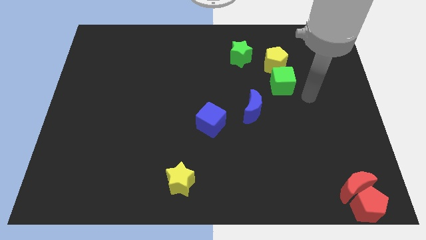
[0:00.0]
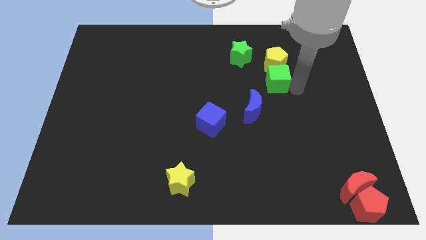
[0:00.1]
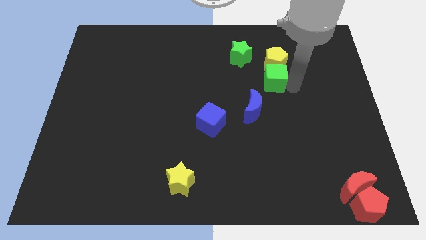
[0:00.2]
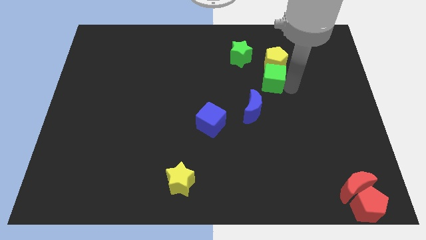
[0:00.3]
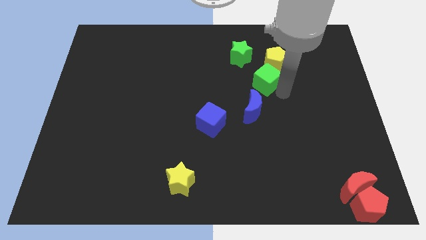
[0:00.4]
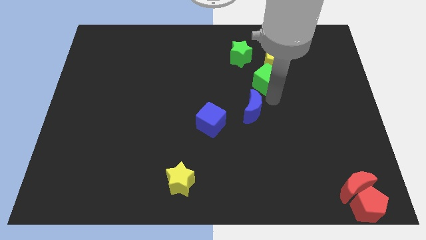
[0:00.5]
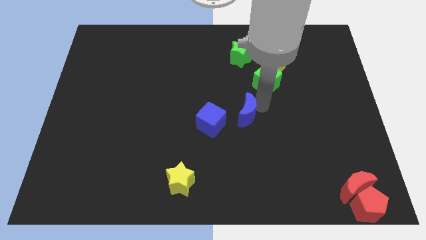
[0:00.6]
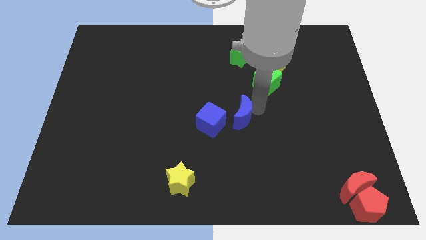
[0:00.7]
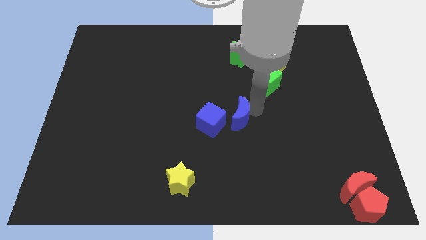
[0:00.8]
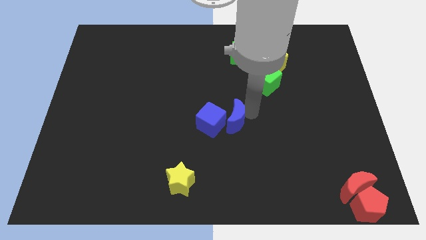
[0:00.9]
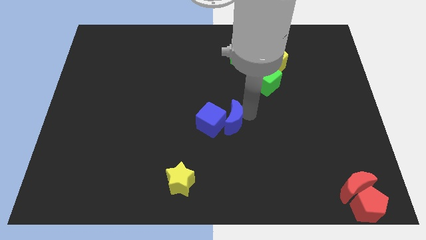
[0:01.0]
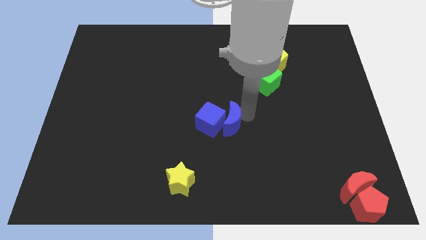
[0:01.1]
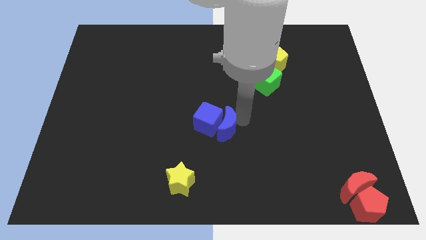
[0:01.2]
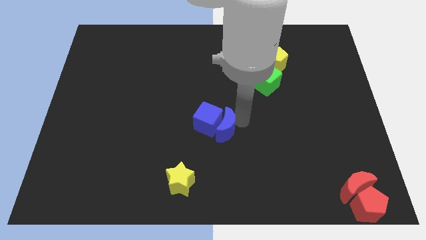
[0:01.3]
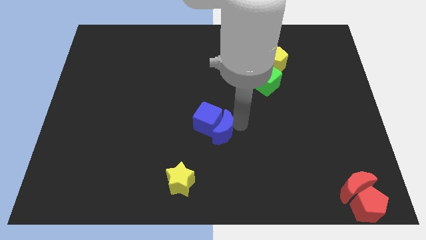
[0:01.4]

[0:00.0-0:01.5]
push the blue moon into the blue cube

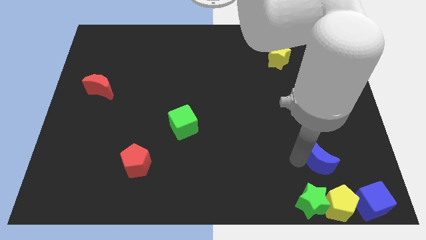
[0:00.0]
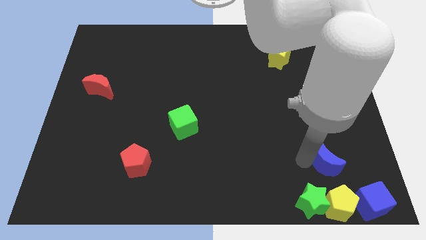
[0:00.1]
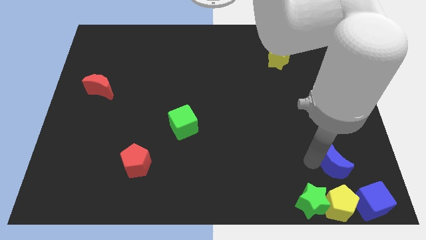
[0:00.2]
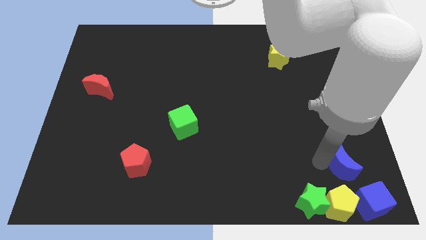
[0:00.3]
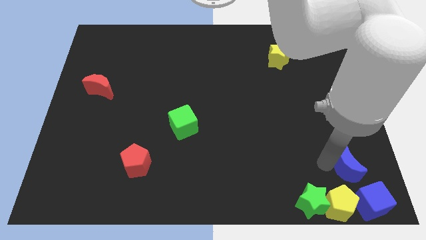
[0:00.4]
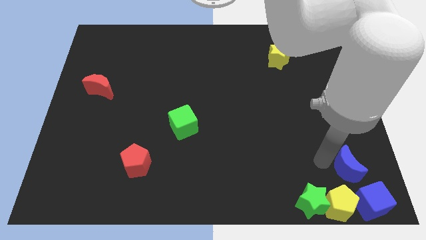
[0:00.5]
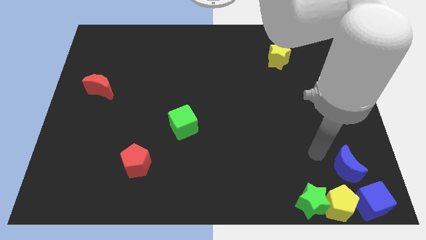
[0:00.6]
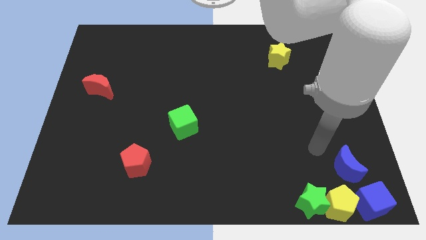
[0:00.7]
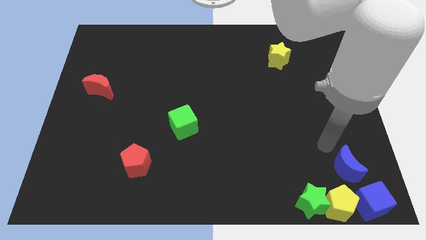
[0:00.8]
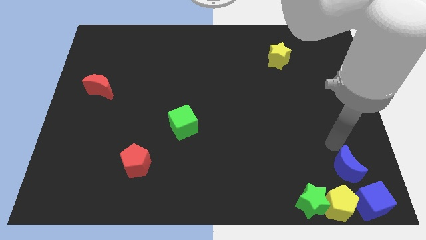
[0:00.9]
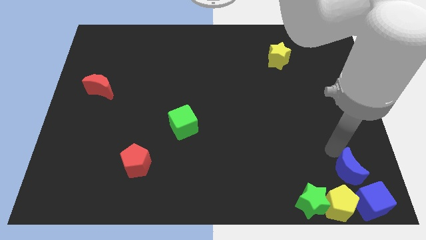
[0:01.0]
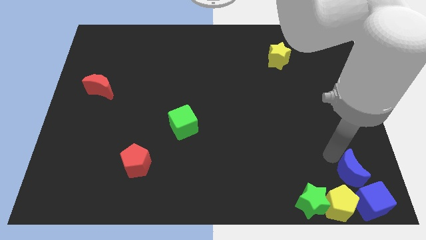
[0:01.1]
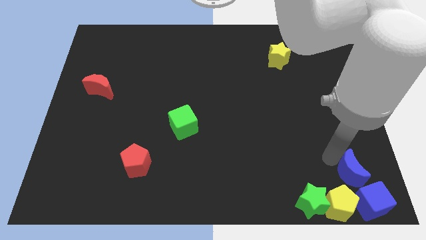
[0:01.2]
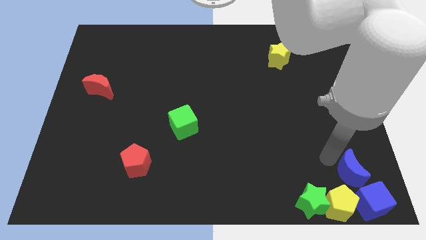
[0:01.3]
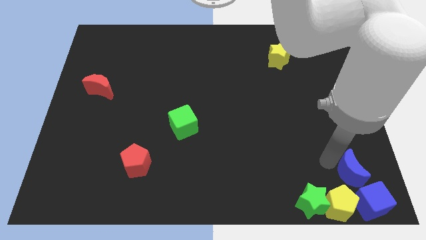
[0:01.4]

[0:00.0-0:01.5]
place the blue moon diagonally top right to yellow pentagon

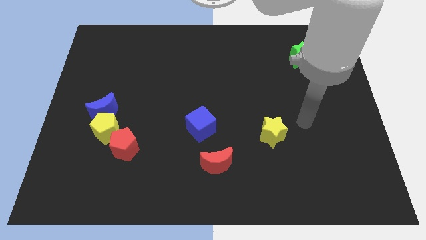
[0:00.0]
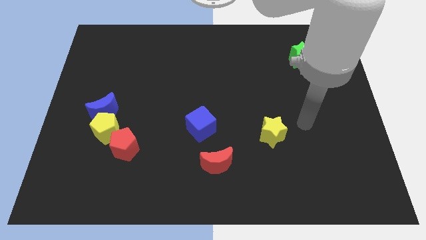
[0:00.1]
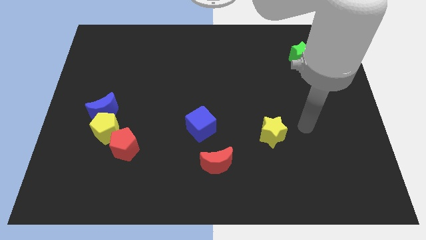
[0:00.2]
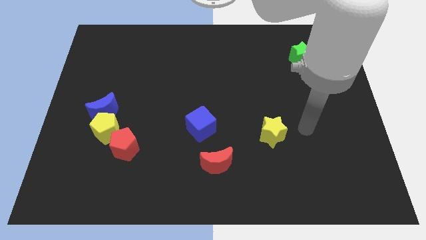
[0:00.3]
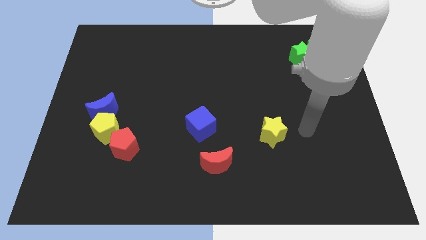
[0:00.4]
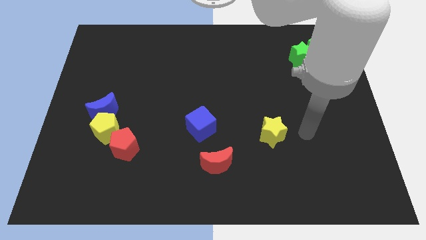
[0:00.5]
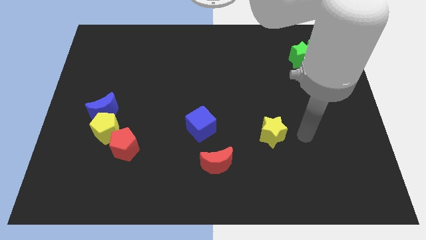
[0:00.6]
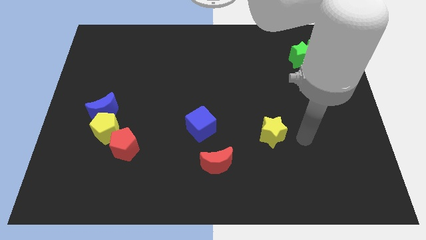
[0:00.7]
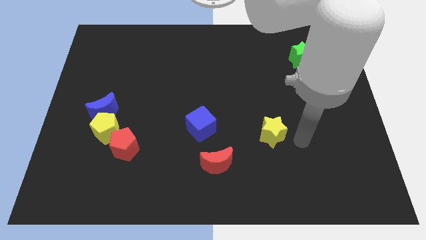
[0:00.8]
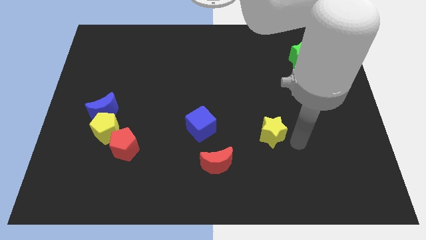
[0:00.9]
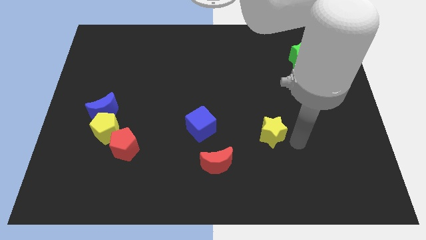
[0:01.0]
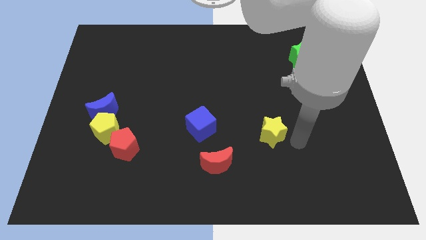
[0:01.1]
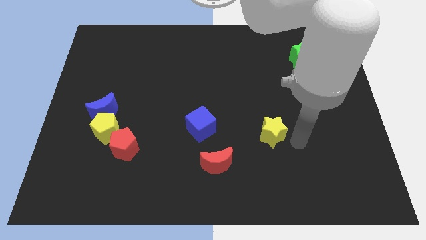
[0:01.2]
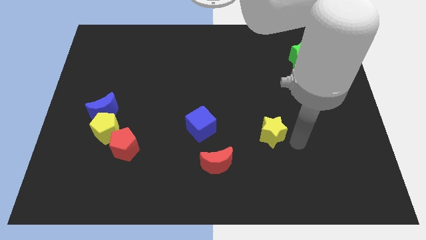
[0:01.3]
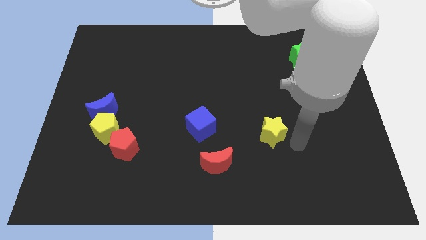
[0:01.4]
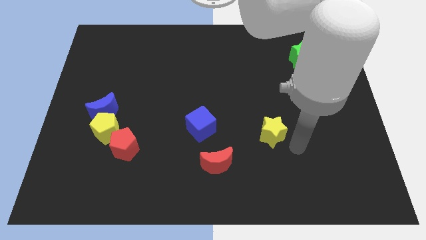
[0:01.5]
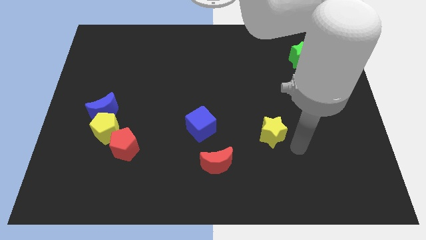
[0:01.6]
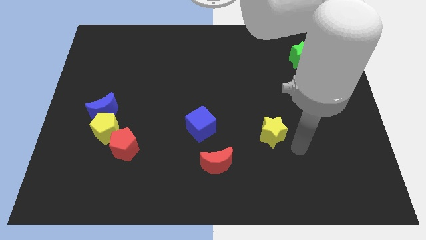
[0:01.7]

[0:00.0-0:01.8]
move the arm towards the yellow star

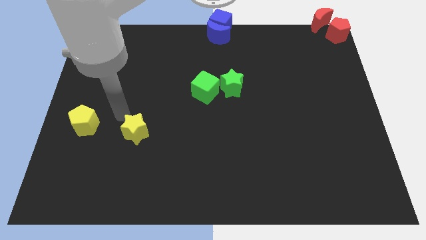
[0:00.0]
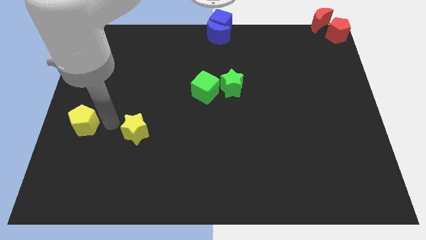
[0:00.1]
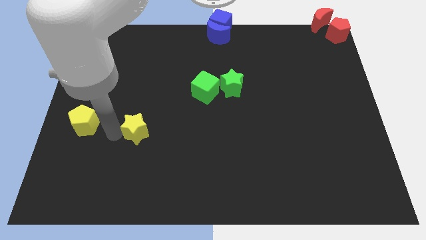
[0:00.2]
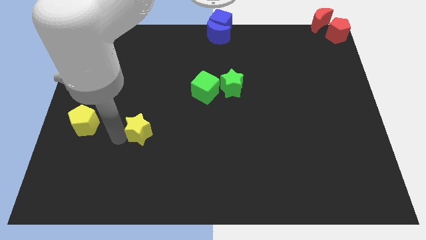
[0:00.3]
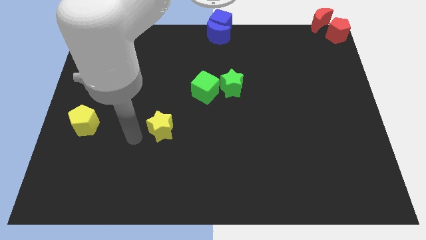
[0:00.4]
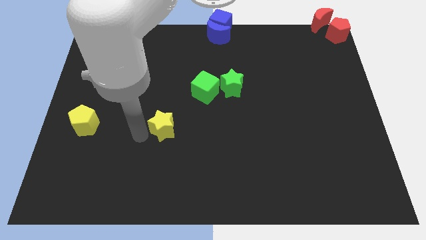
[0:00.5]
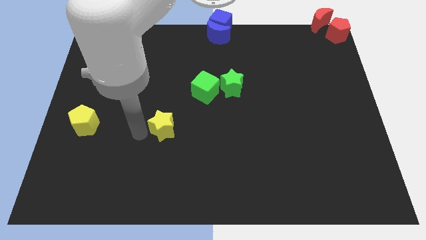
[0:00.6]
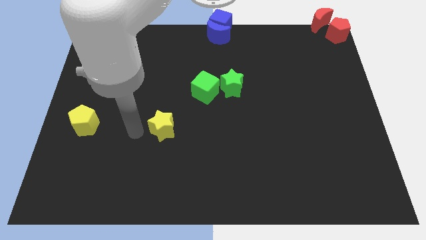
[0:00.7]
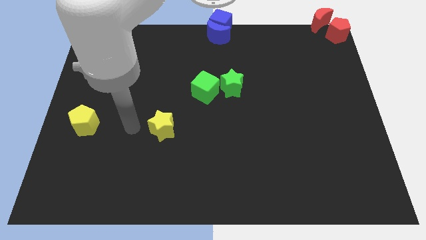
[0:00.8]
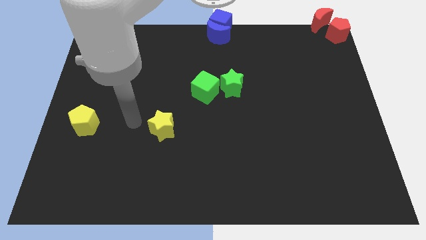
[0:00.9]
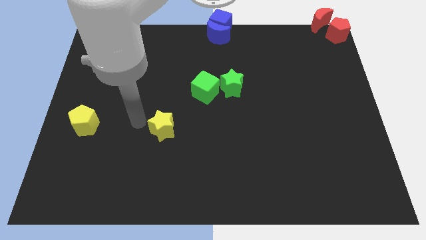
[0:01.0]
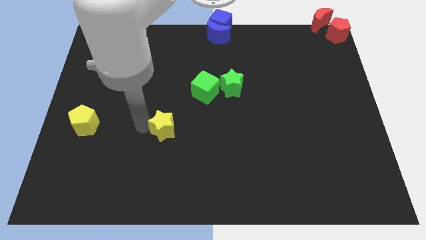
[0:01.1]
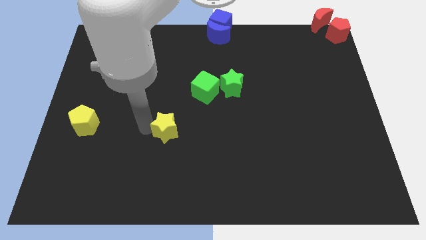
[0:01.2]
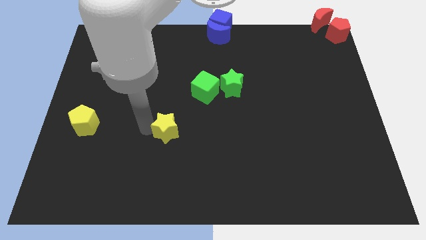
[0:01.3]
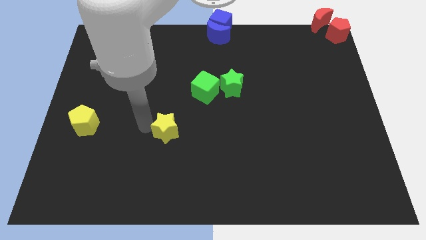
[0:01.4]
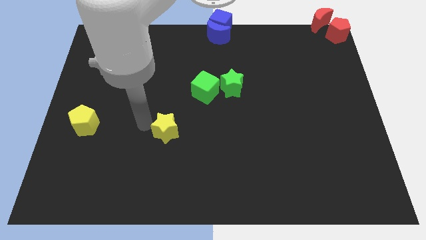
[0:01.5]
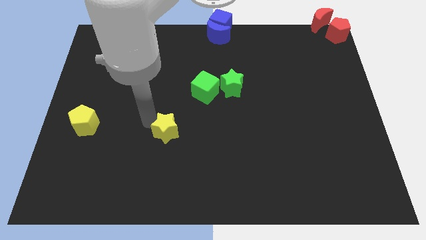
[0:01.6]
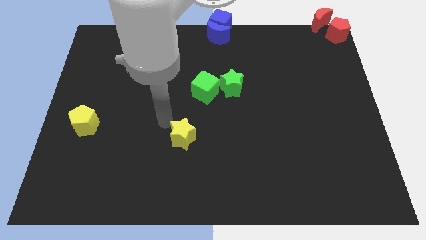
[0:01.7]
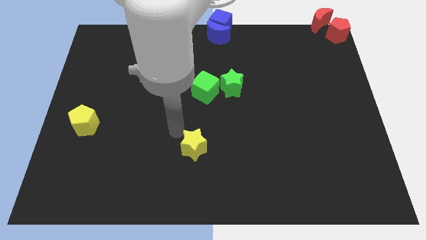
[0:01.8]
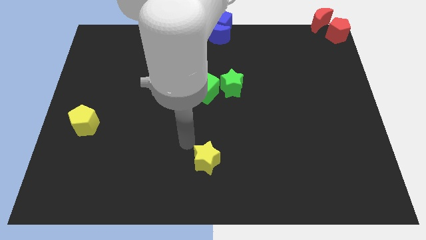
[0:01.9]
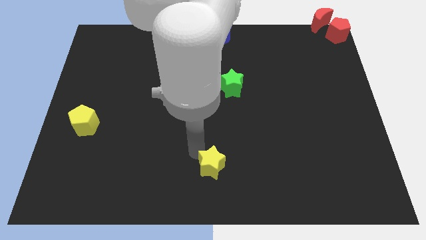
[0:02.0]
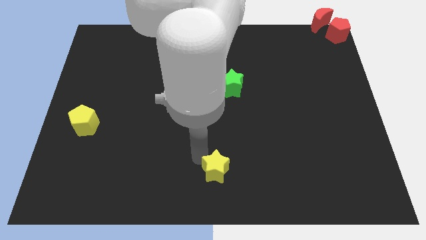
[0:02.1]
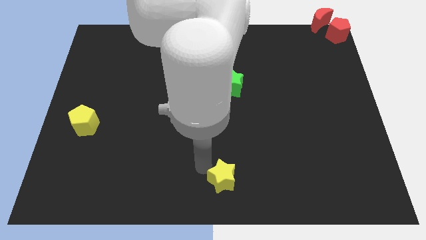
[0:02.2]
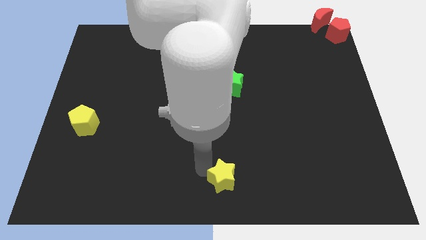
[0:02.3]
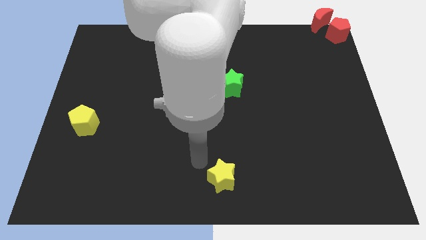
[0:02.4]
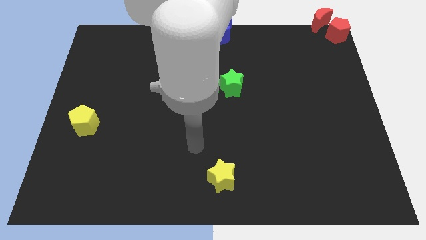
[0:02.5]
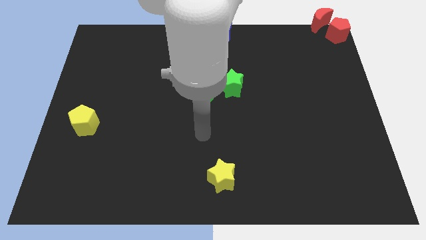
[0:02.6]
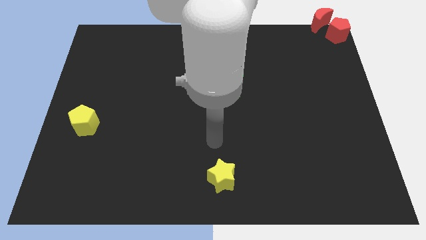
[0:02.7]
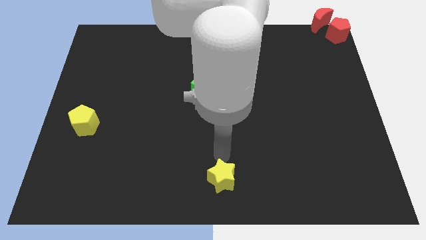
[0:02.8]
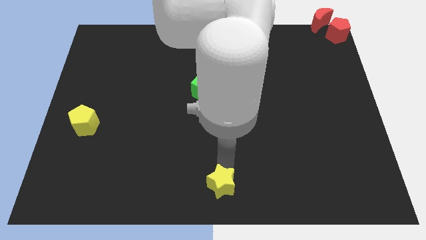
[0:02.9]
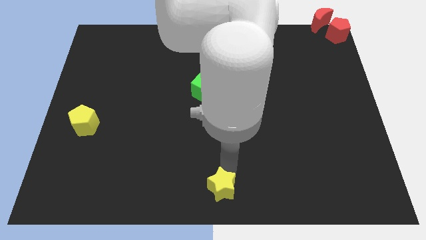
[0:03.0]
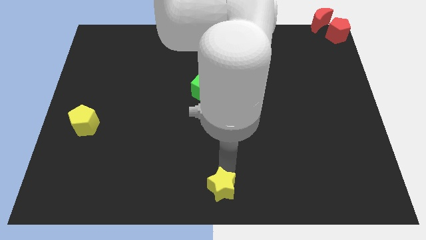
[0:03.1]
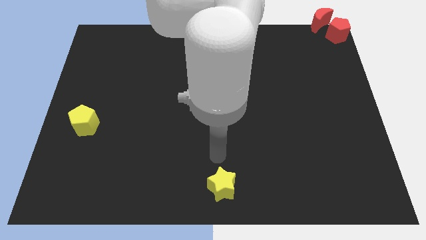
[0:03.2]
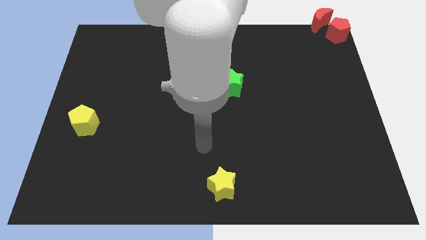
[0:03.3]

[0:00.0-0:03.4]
place the yellow star at the bottom center of the board

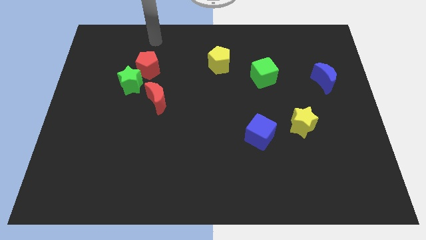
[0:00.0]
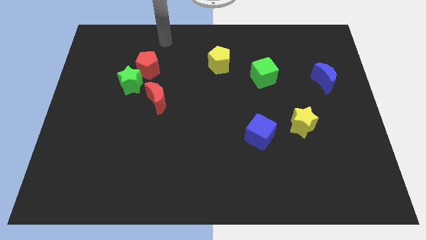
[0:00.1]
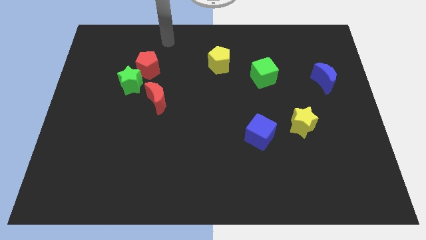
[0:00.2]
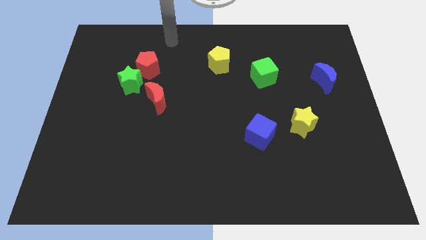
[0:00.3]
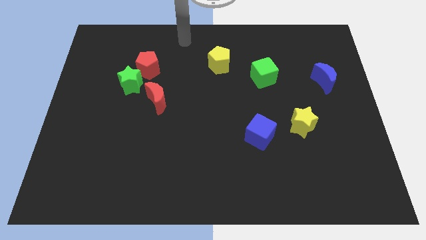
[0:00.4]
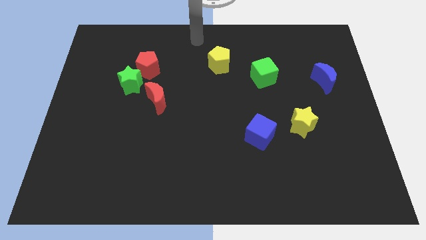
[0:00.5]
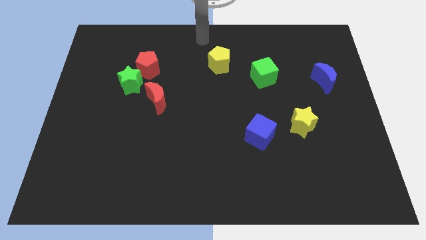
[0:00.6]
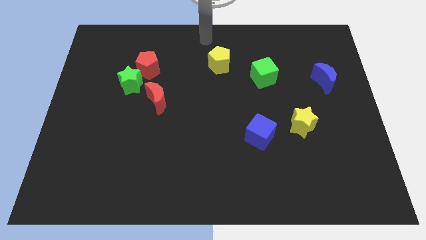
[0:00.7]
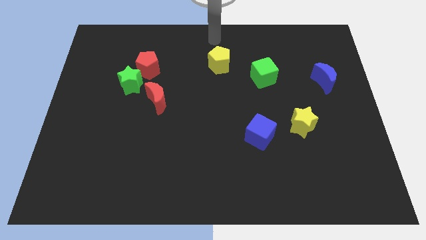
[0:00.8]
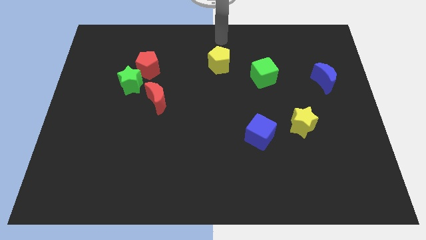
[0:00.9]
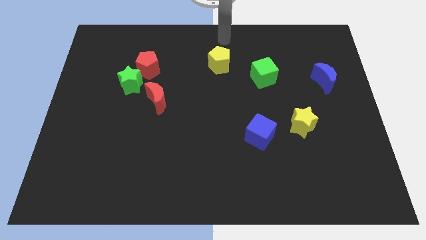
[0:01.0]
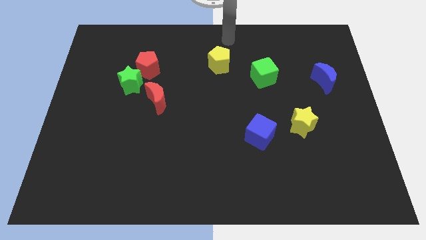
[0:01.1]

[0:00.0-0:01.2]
move arm to the top of yellow pentagon
